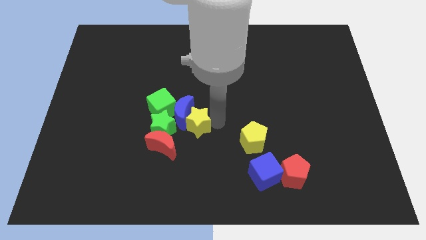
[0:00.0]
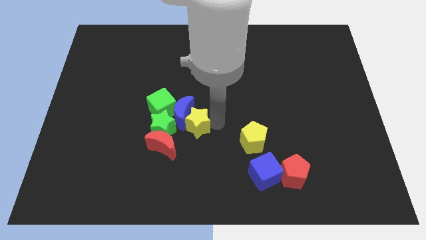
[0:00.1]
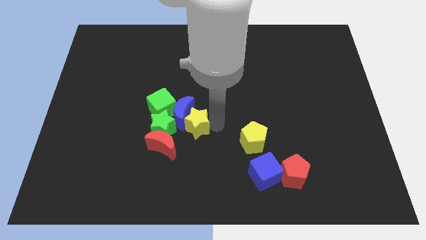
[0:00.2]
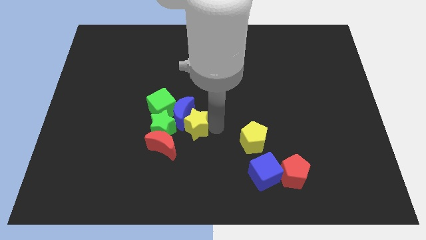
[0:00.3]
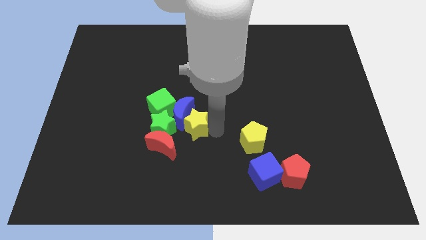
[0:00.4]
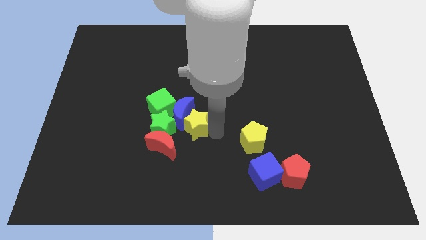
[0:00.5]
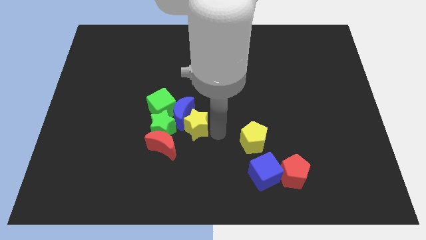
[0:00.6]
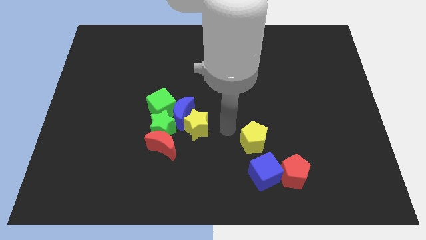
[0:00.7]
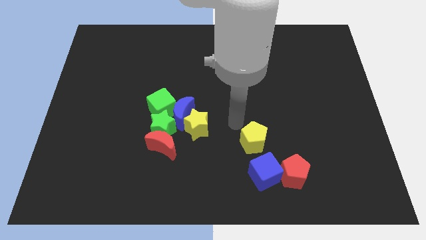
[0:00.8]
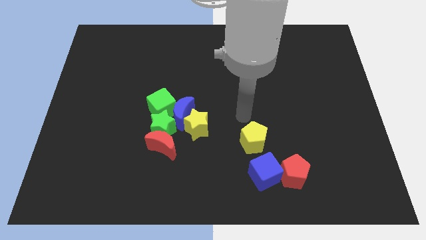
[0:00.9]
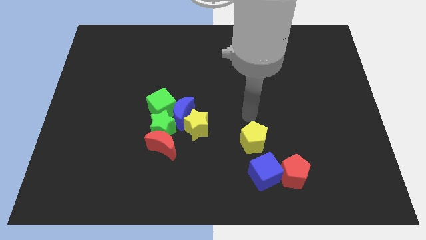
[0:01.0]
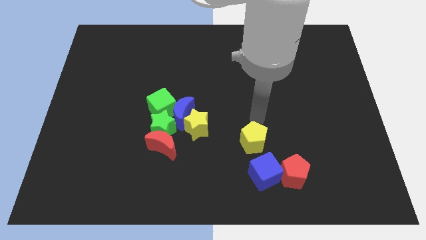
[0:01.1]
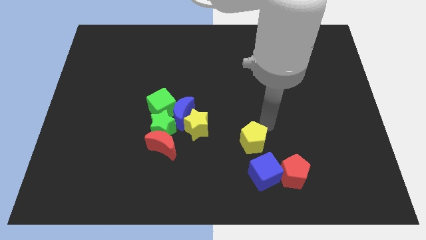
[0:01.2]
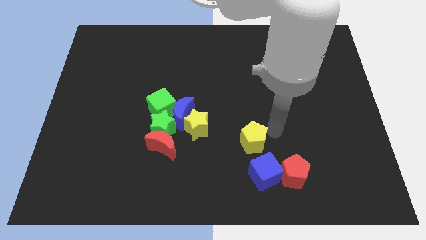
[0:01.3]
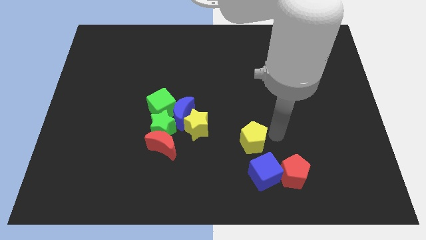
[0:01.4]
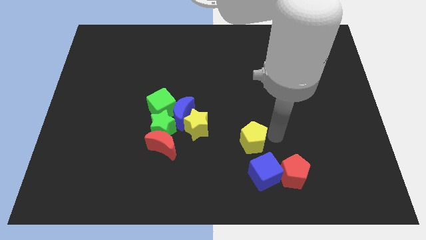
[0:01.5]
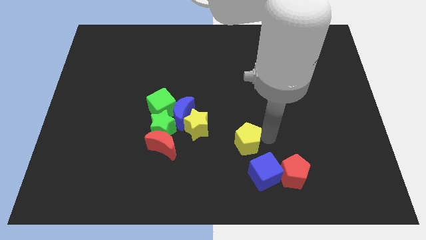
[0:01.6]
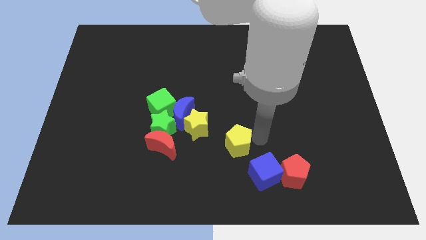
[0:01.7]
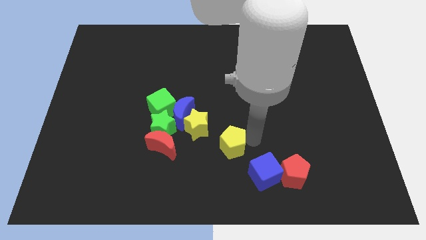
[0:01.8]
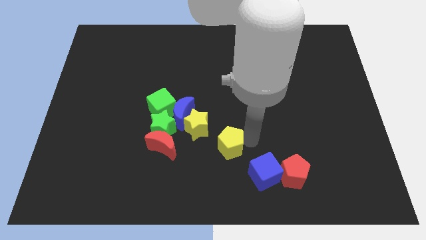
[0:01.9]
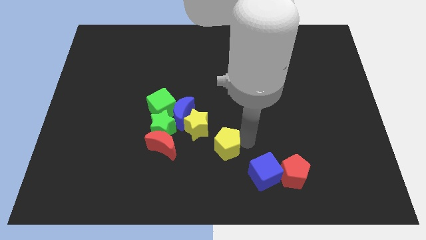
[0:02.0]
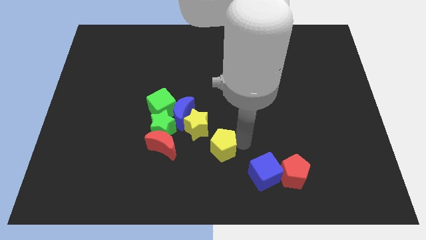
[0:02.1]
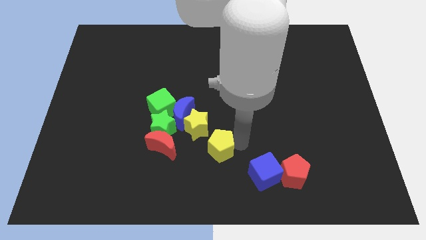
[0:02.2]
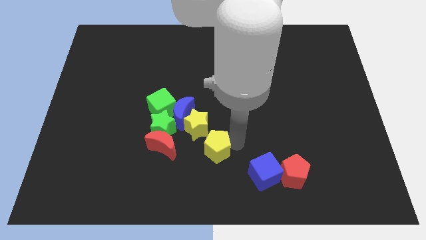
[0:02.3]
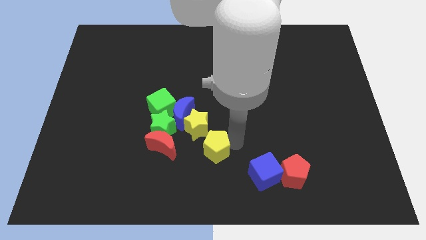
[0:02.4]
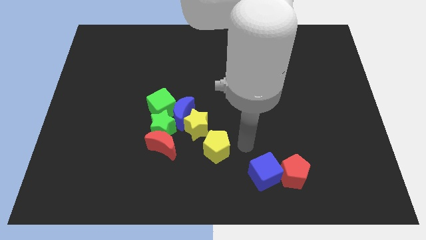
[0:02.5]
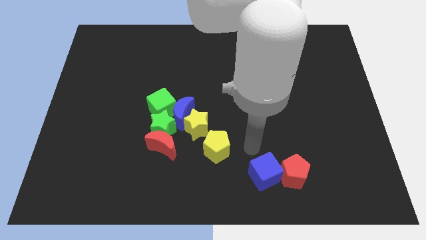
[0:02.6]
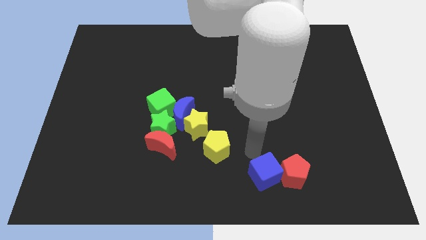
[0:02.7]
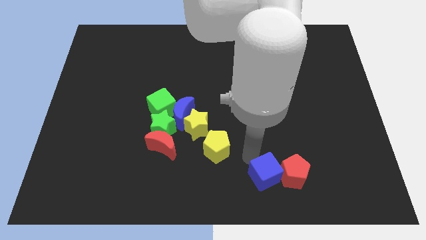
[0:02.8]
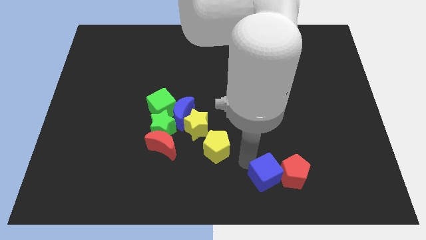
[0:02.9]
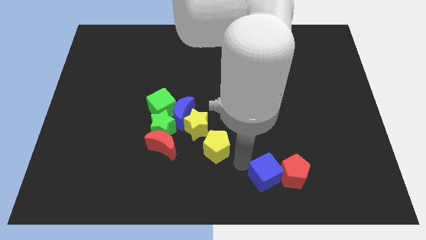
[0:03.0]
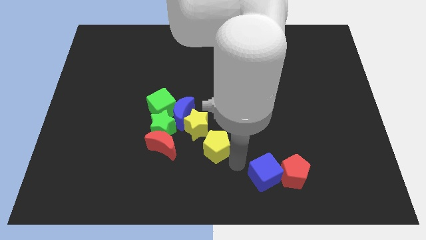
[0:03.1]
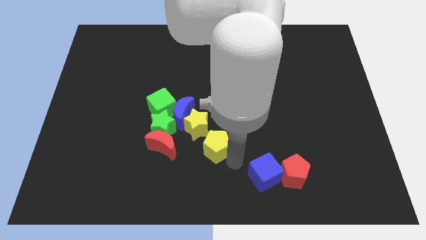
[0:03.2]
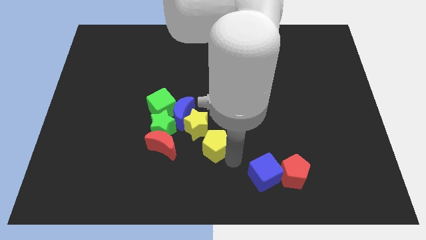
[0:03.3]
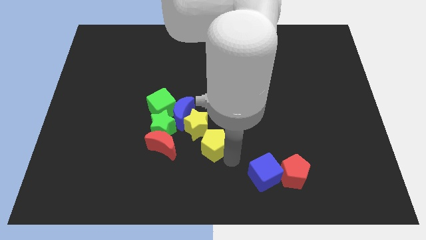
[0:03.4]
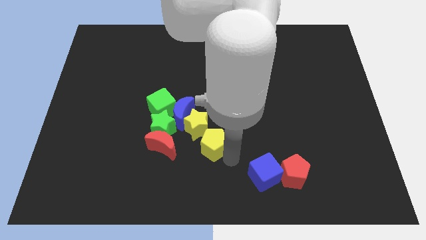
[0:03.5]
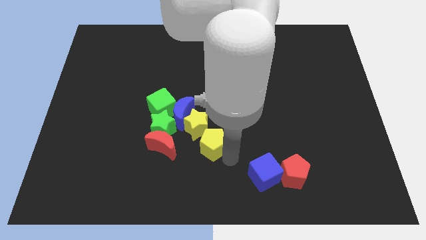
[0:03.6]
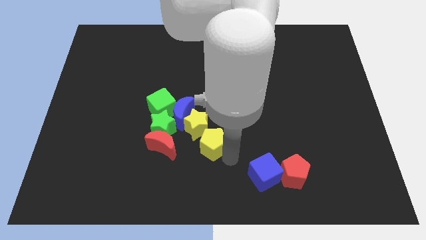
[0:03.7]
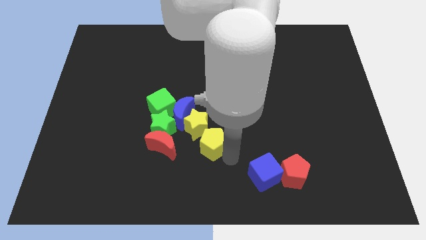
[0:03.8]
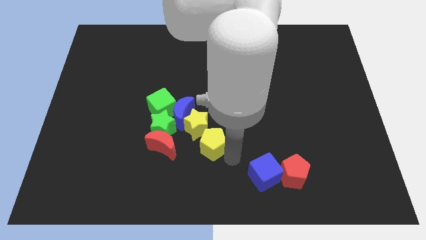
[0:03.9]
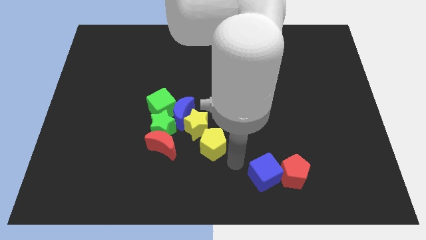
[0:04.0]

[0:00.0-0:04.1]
push the yellow pentagon into the yellow star

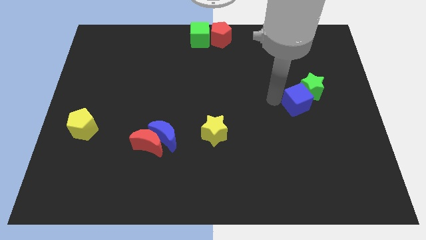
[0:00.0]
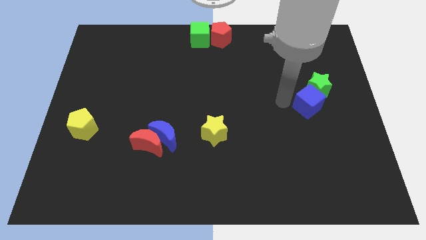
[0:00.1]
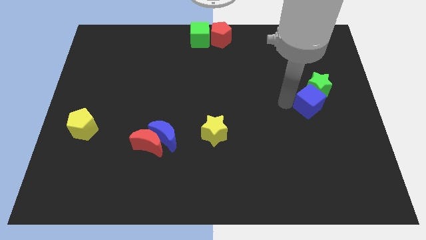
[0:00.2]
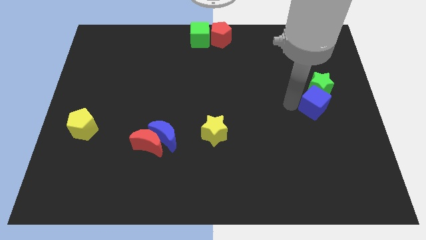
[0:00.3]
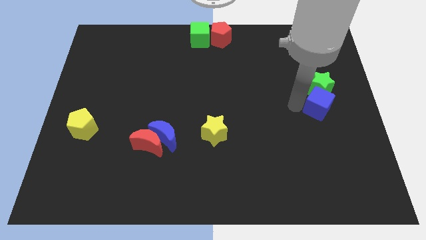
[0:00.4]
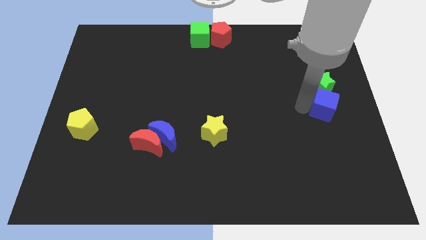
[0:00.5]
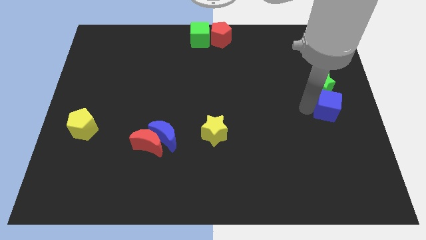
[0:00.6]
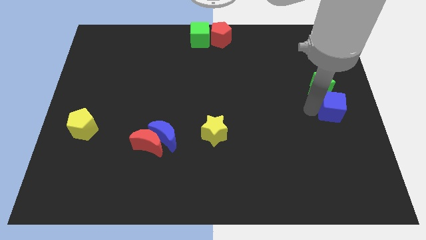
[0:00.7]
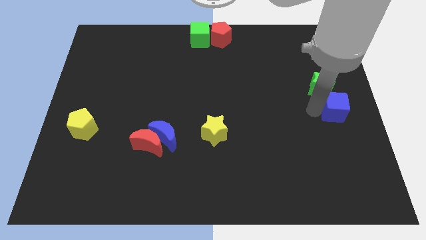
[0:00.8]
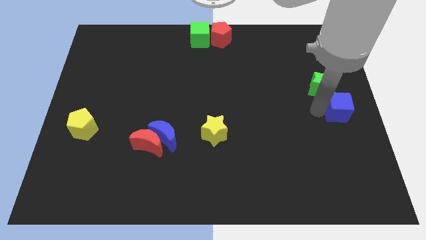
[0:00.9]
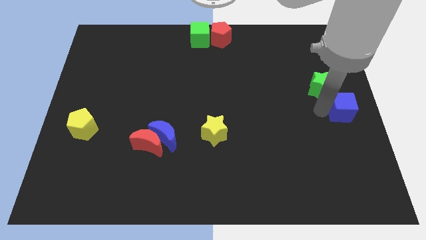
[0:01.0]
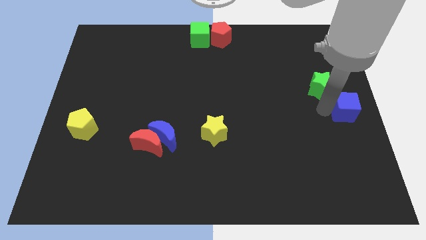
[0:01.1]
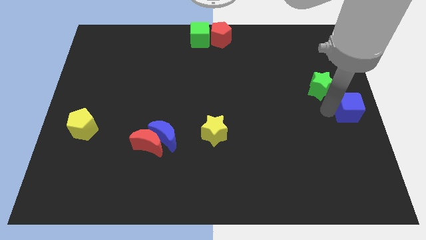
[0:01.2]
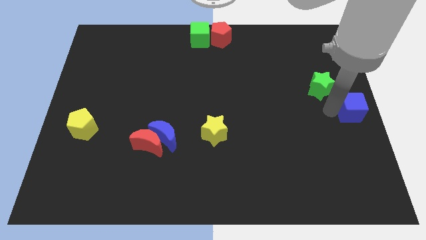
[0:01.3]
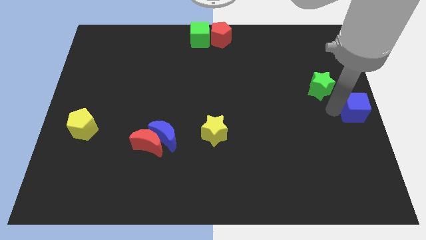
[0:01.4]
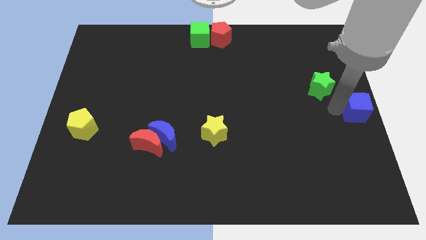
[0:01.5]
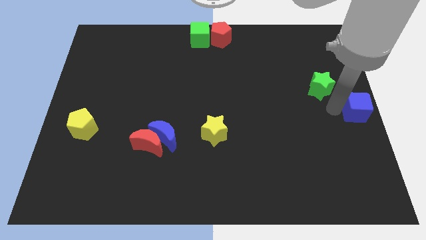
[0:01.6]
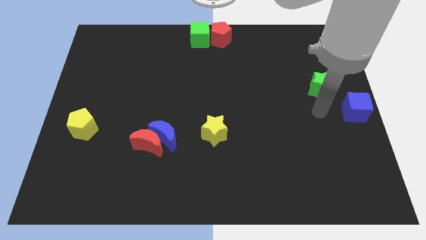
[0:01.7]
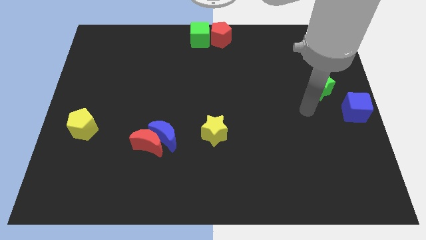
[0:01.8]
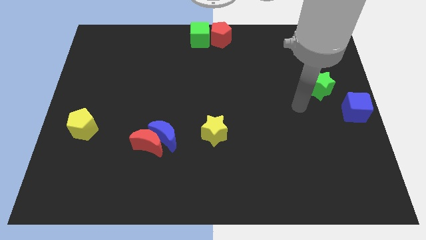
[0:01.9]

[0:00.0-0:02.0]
place the blue cube to the center right of the board

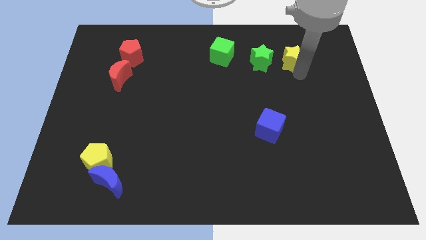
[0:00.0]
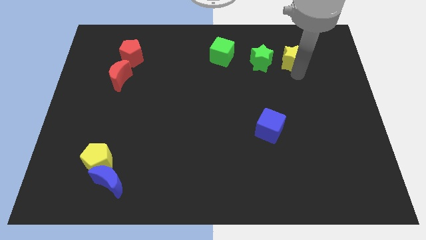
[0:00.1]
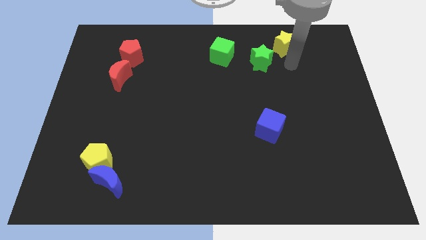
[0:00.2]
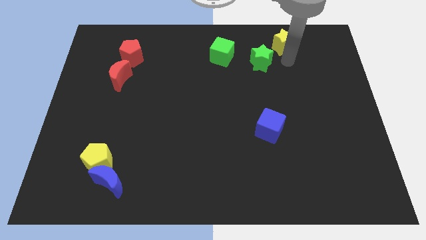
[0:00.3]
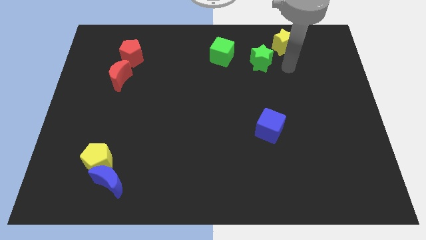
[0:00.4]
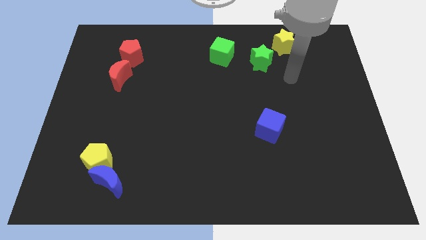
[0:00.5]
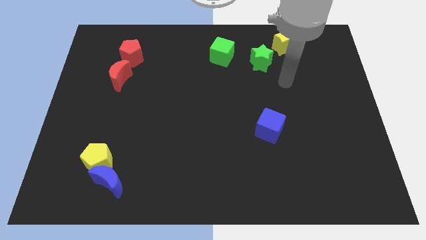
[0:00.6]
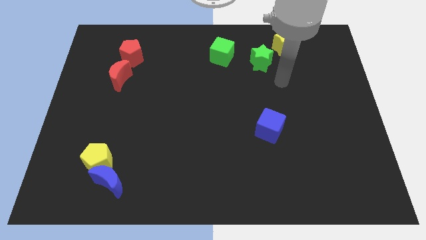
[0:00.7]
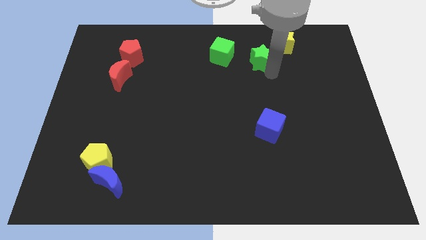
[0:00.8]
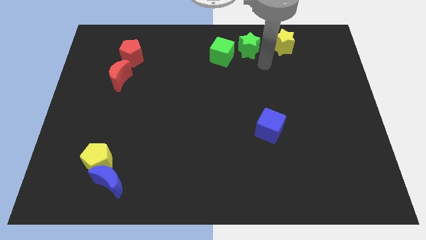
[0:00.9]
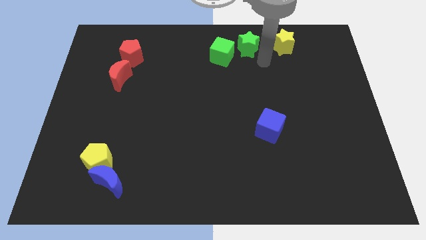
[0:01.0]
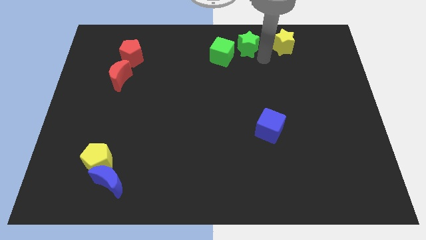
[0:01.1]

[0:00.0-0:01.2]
place the green star right to the green cube

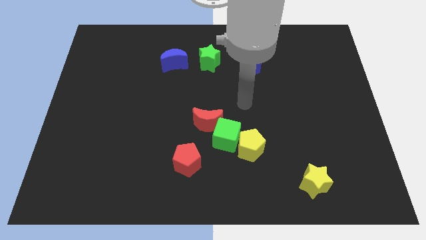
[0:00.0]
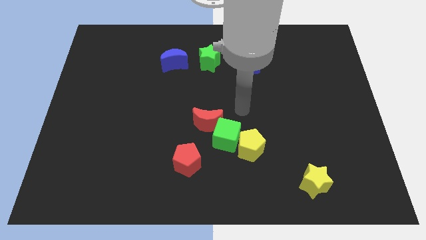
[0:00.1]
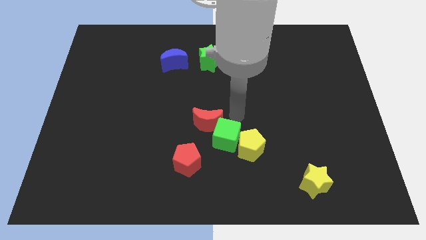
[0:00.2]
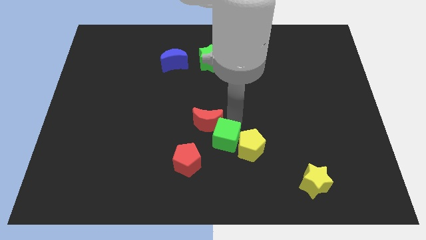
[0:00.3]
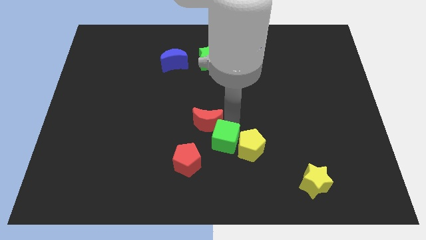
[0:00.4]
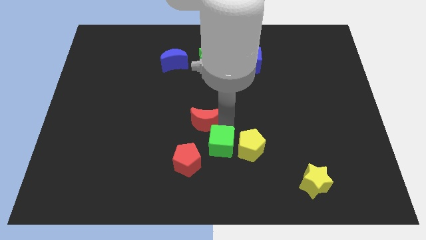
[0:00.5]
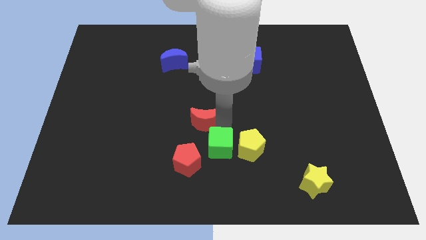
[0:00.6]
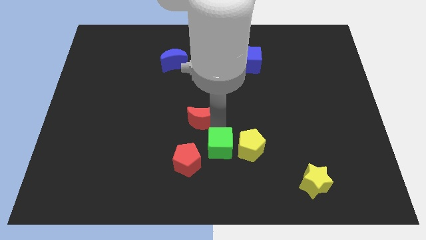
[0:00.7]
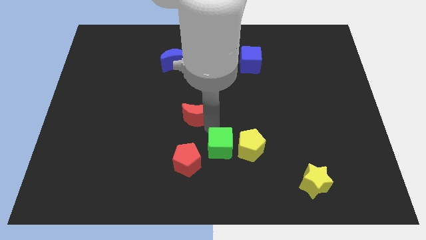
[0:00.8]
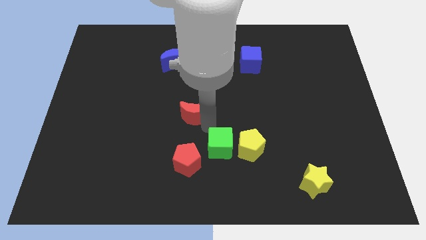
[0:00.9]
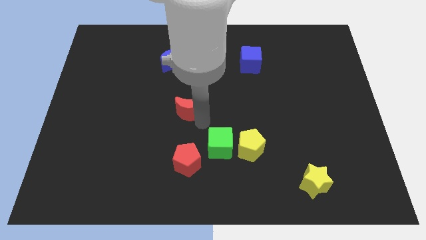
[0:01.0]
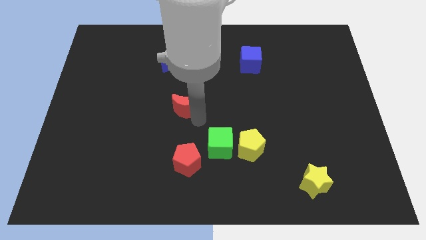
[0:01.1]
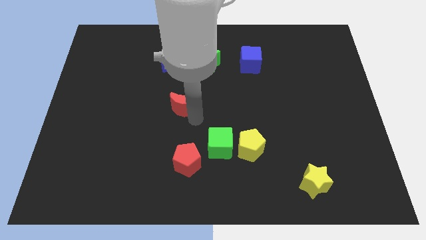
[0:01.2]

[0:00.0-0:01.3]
separate red moon and green cube

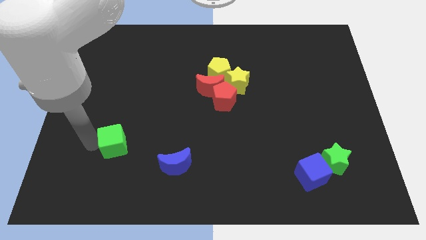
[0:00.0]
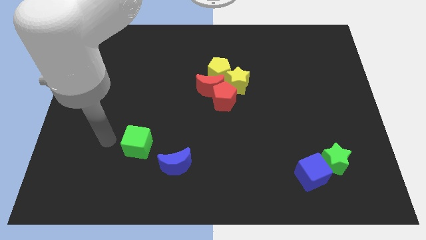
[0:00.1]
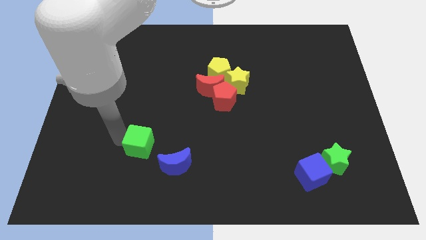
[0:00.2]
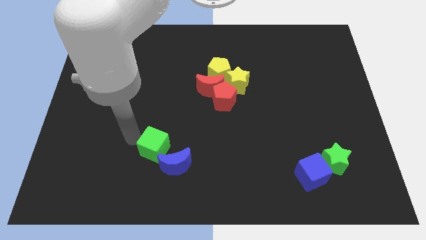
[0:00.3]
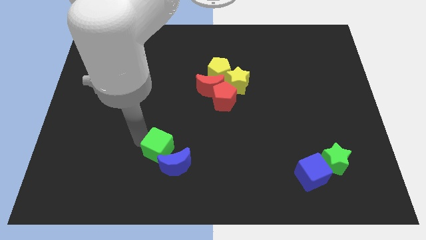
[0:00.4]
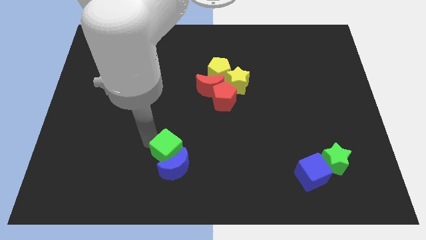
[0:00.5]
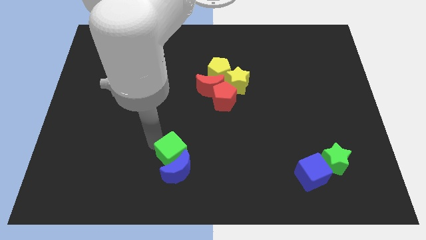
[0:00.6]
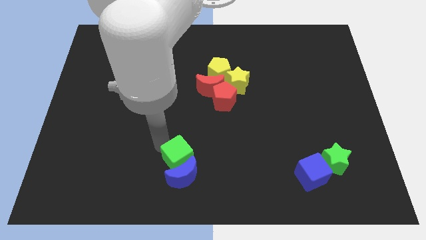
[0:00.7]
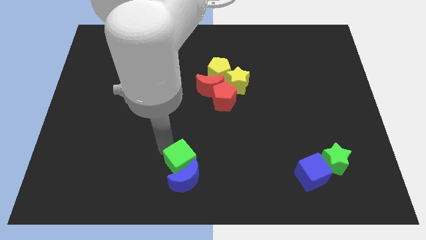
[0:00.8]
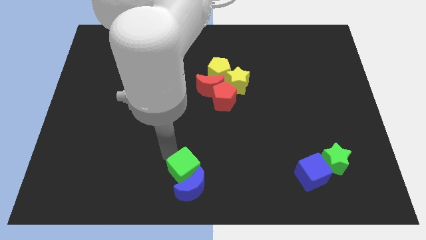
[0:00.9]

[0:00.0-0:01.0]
push green cube into blue crescent
